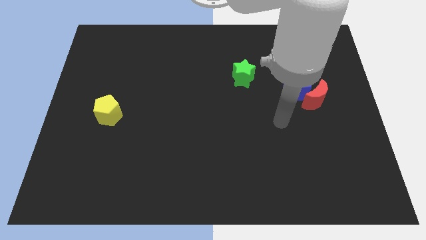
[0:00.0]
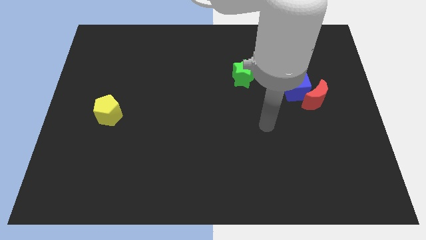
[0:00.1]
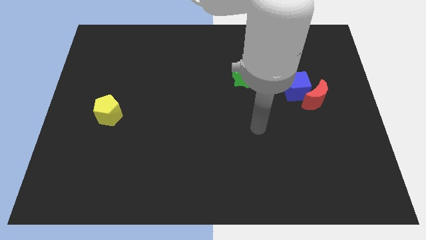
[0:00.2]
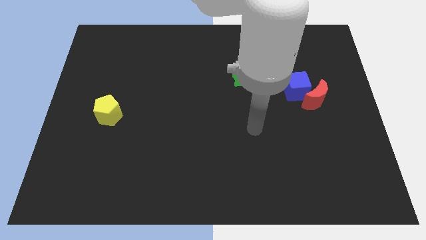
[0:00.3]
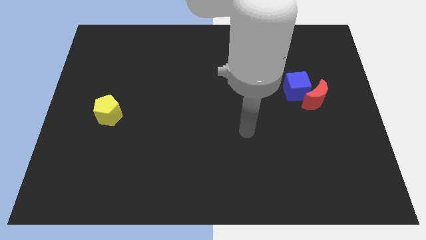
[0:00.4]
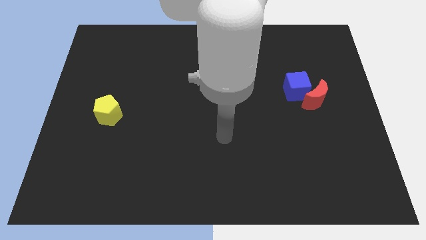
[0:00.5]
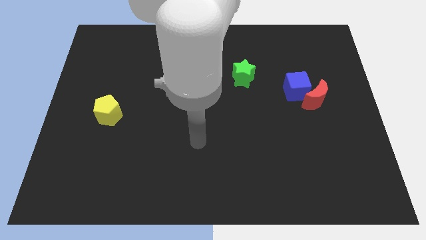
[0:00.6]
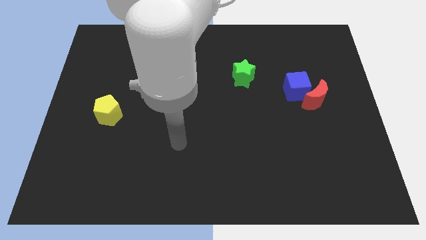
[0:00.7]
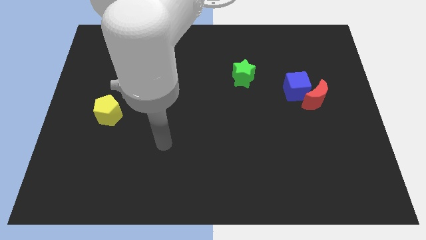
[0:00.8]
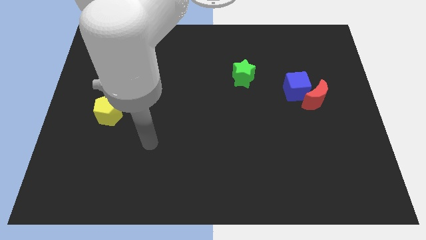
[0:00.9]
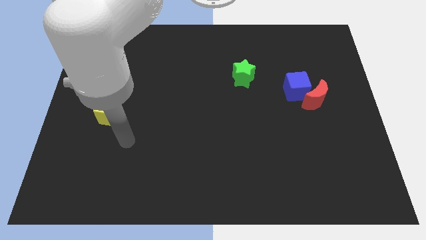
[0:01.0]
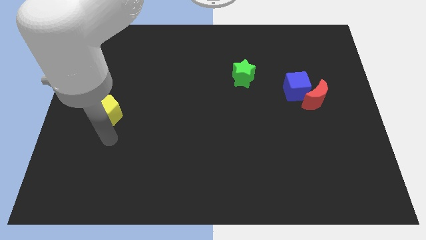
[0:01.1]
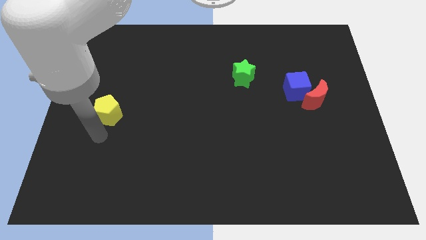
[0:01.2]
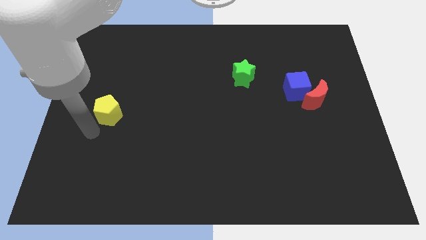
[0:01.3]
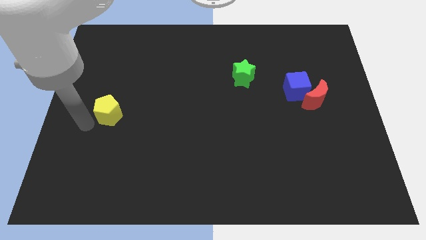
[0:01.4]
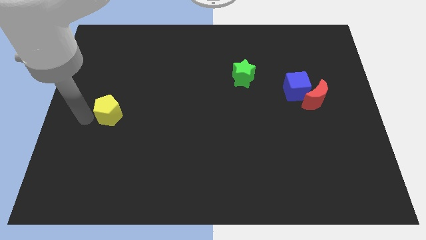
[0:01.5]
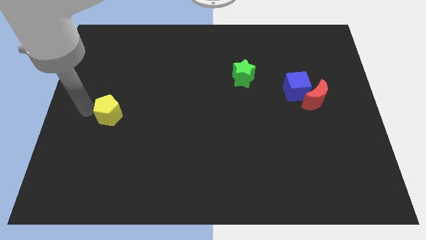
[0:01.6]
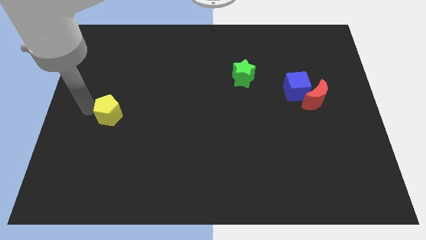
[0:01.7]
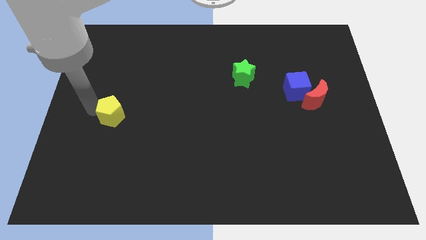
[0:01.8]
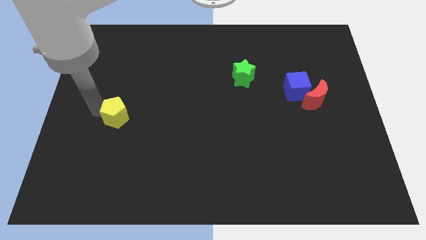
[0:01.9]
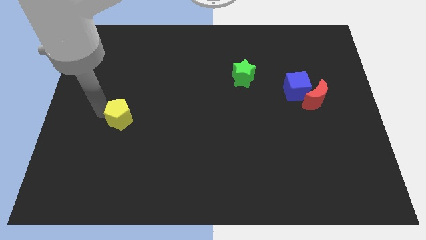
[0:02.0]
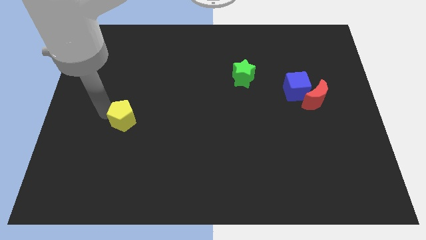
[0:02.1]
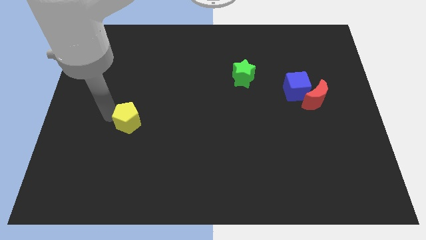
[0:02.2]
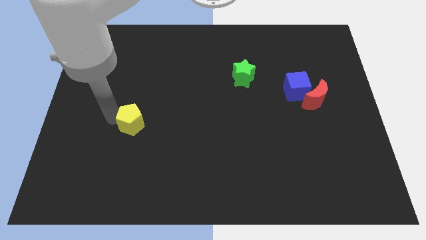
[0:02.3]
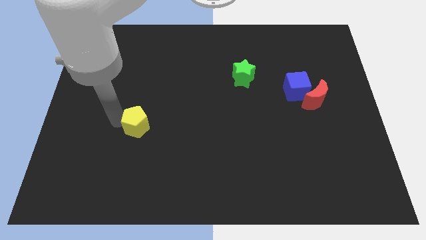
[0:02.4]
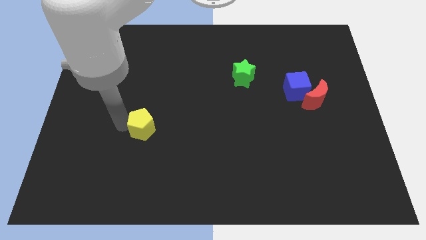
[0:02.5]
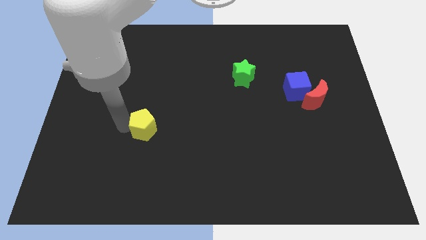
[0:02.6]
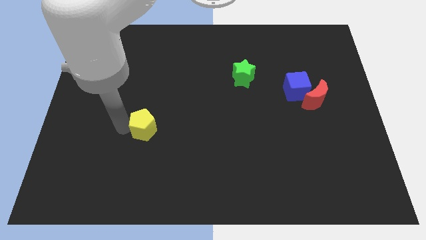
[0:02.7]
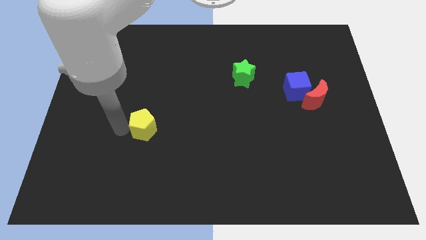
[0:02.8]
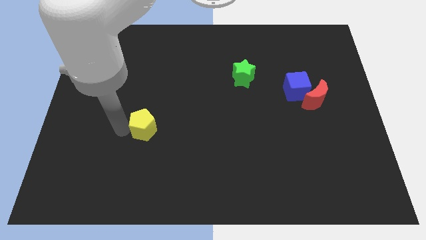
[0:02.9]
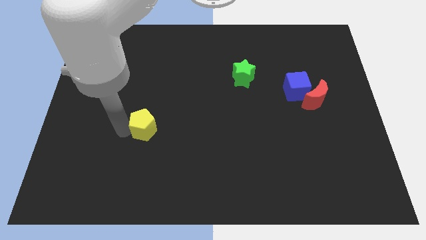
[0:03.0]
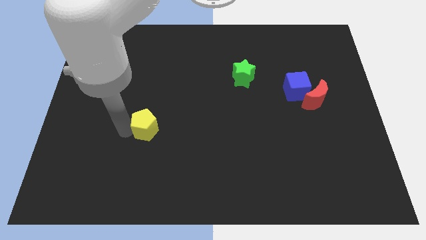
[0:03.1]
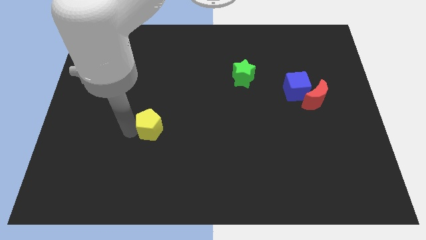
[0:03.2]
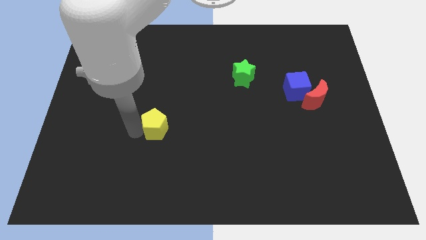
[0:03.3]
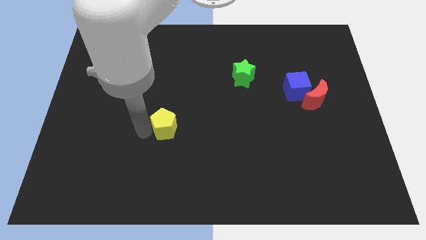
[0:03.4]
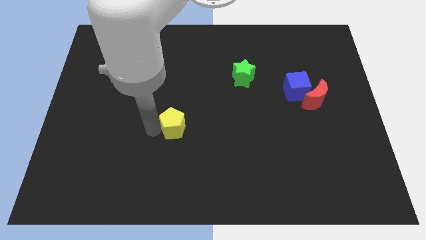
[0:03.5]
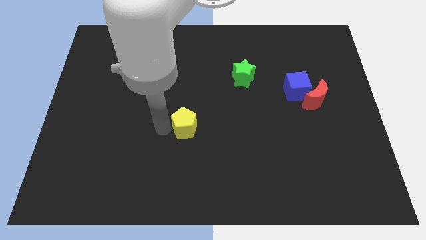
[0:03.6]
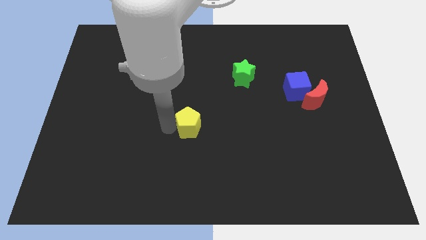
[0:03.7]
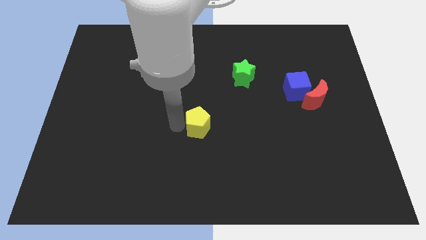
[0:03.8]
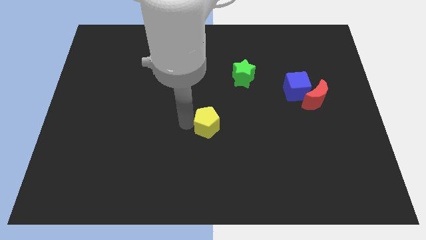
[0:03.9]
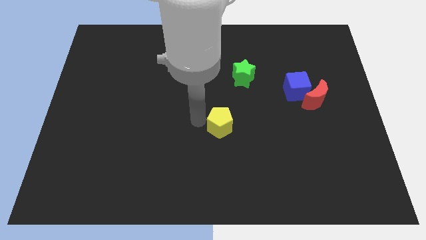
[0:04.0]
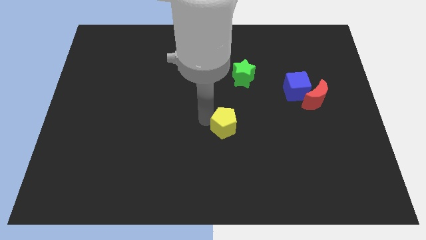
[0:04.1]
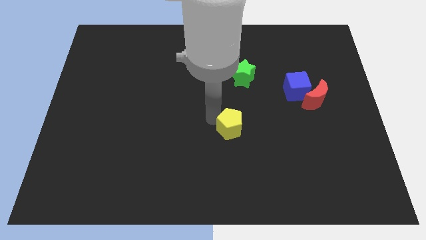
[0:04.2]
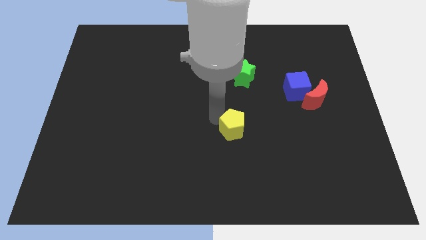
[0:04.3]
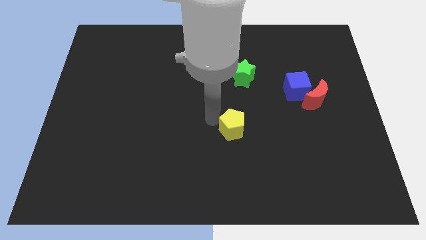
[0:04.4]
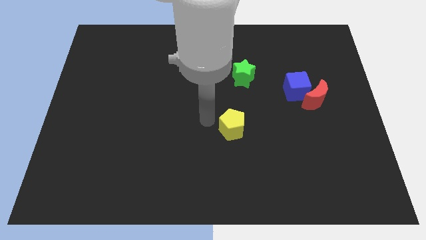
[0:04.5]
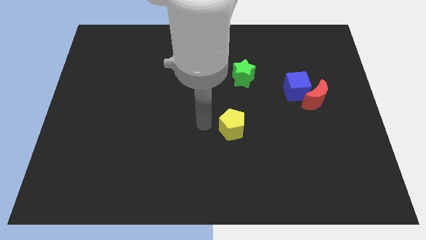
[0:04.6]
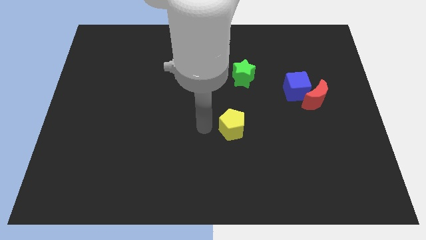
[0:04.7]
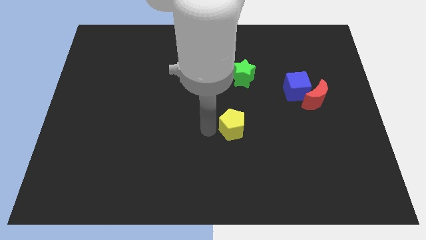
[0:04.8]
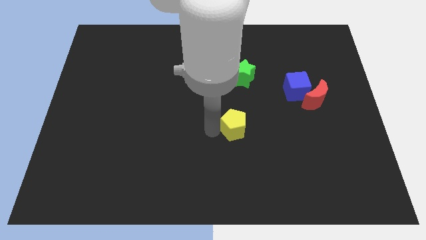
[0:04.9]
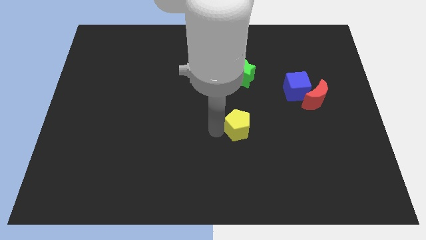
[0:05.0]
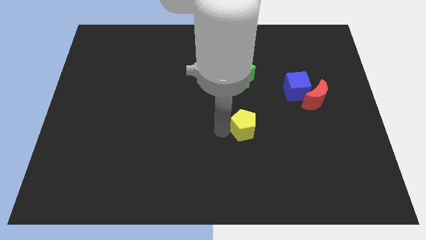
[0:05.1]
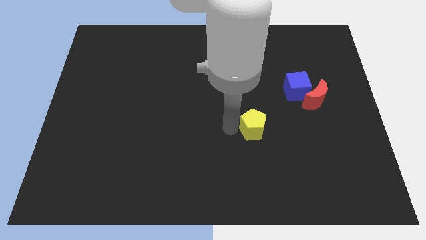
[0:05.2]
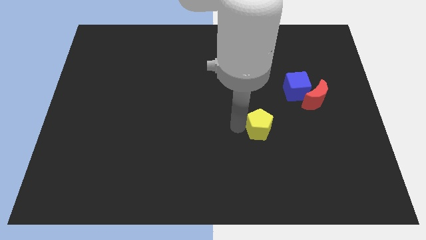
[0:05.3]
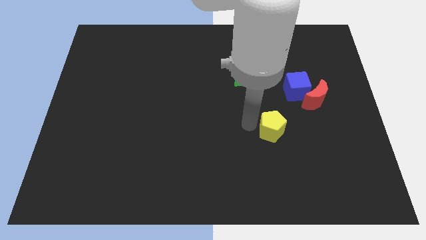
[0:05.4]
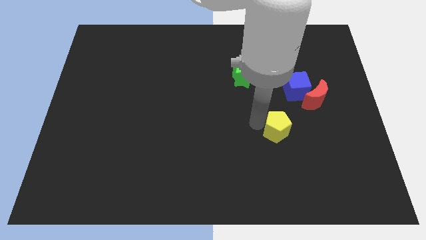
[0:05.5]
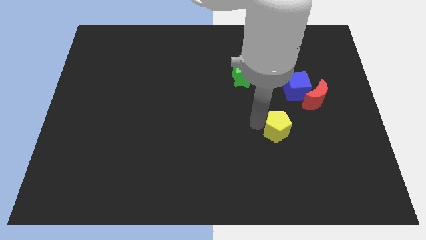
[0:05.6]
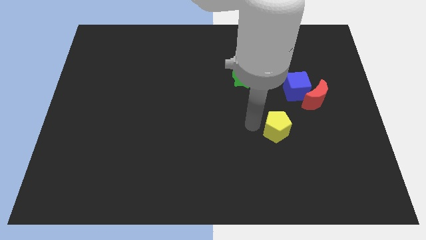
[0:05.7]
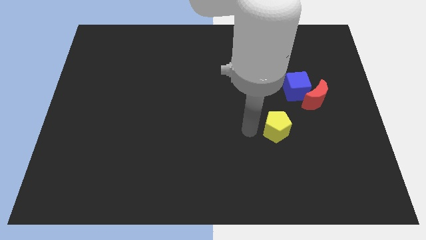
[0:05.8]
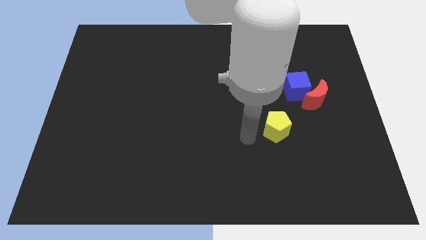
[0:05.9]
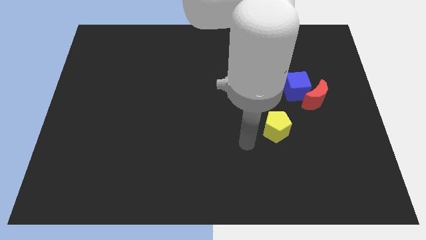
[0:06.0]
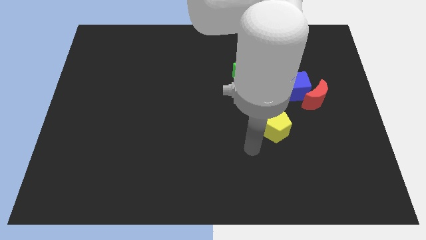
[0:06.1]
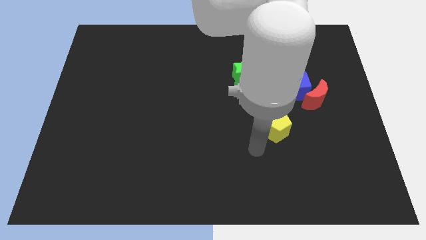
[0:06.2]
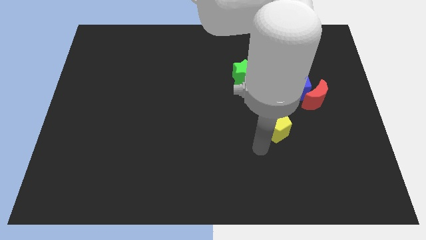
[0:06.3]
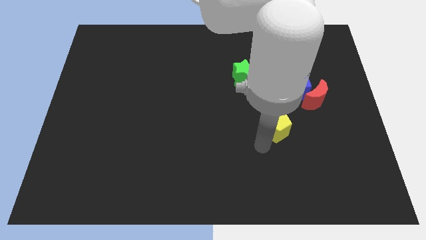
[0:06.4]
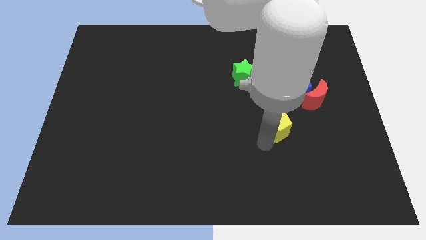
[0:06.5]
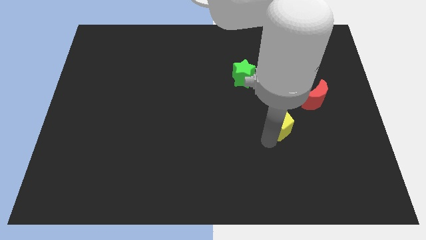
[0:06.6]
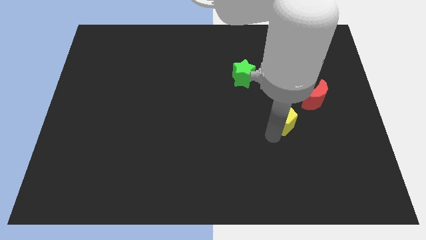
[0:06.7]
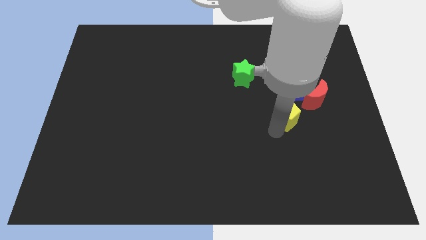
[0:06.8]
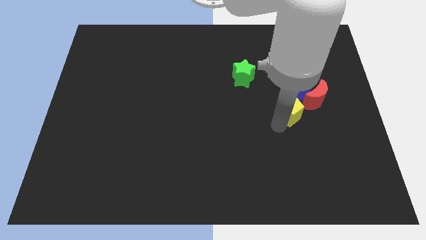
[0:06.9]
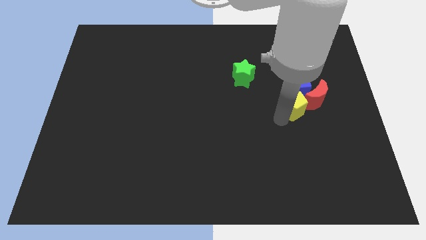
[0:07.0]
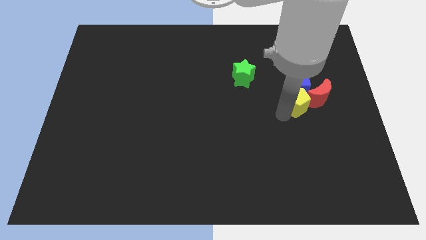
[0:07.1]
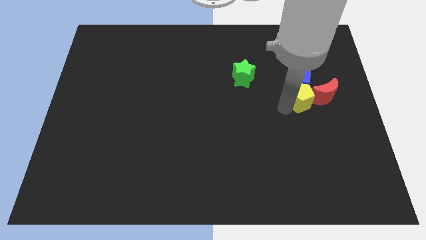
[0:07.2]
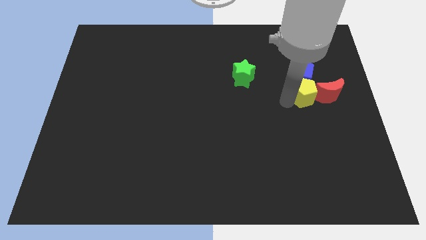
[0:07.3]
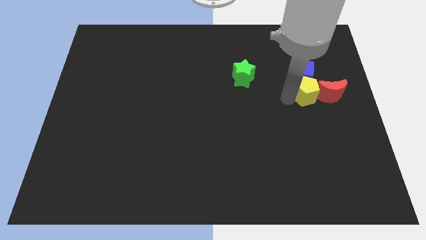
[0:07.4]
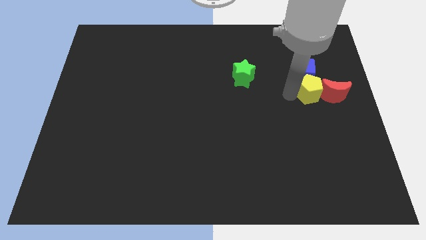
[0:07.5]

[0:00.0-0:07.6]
put the yellow block towards the red moon

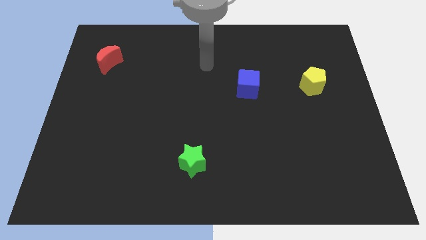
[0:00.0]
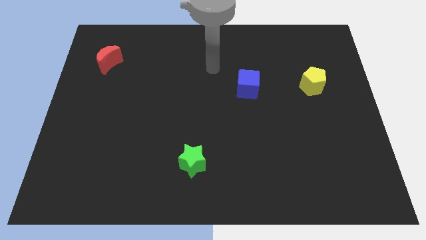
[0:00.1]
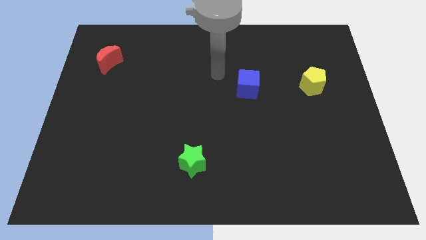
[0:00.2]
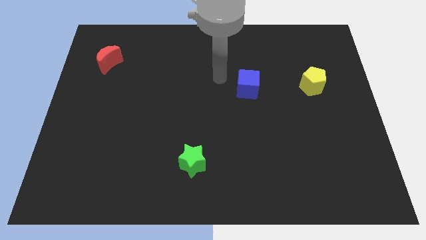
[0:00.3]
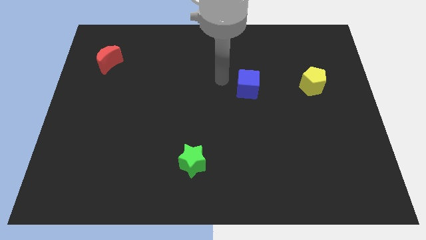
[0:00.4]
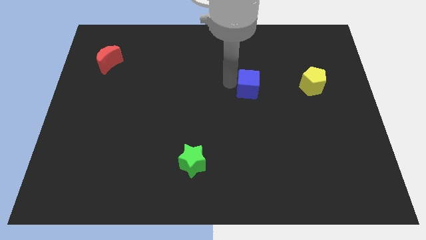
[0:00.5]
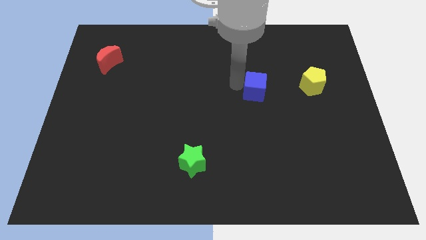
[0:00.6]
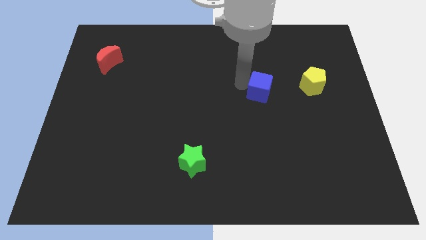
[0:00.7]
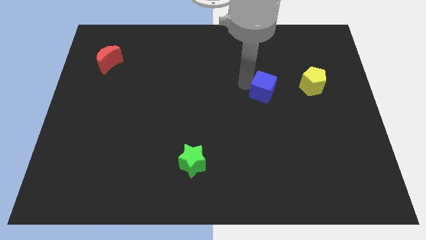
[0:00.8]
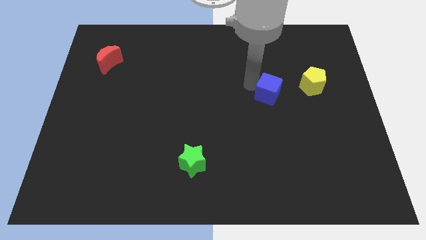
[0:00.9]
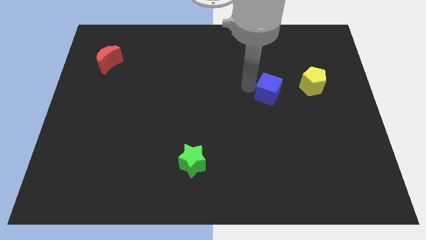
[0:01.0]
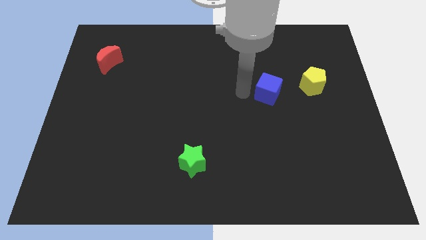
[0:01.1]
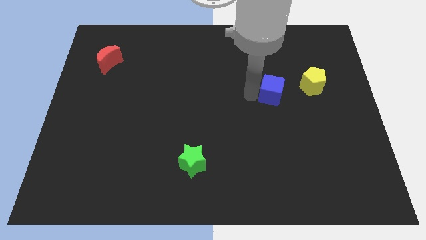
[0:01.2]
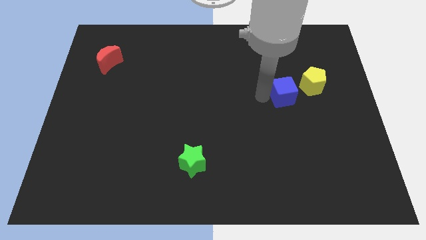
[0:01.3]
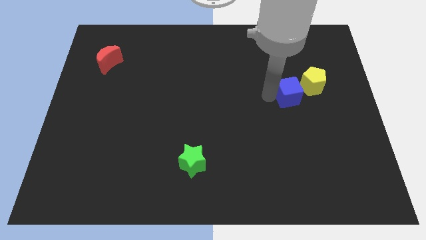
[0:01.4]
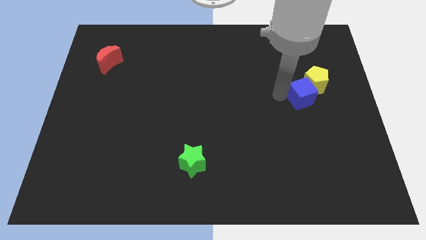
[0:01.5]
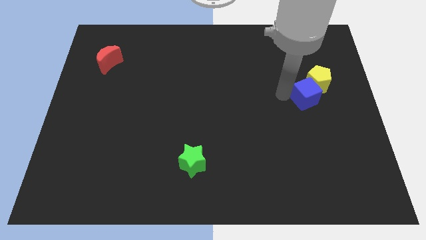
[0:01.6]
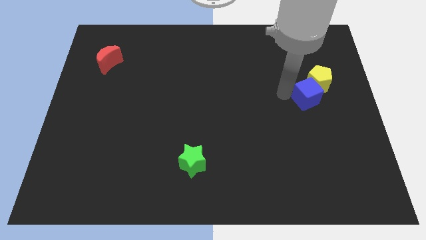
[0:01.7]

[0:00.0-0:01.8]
move the blue block next to the yellow pentagon
